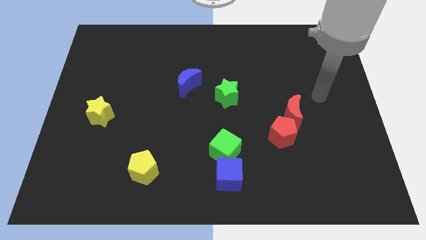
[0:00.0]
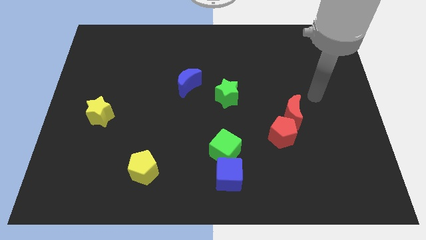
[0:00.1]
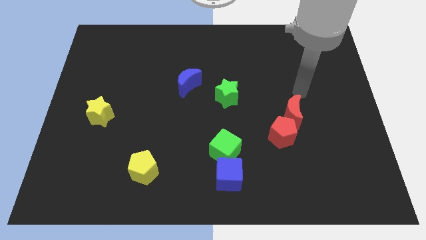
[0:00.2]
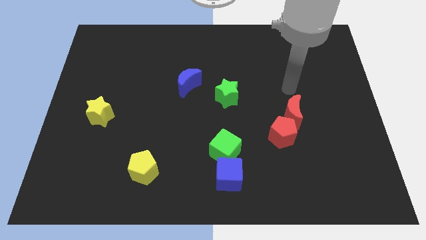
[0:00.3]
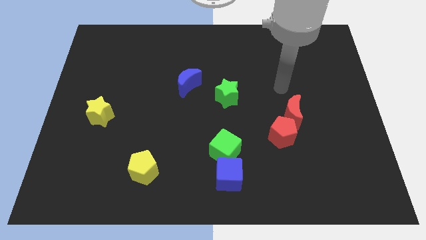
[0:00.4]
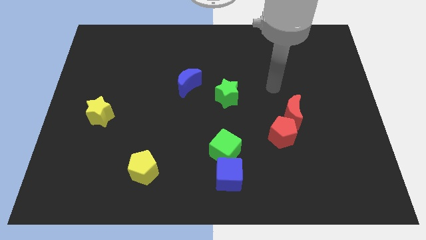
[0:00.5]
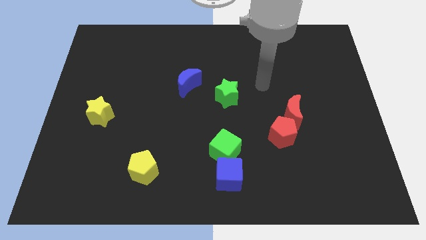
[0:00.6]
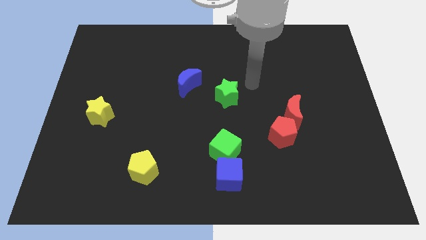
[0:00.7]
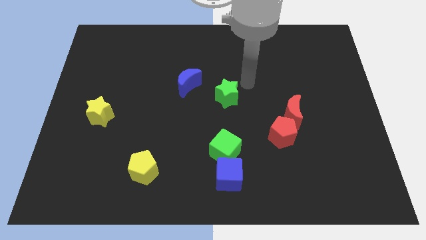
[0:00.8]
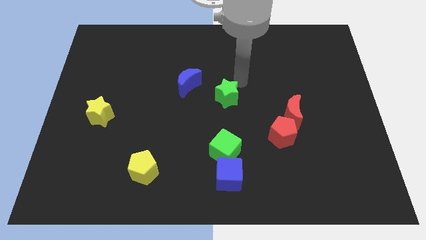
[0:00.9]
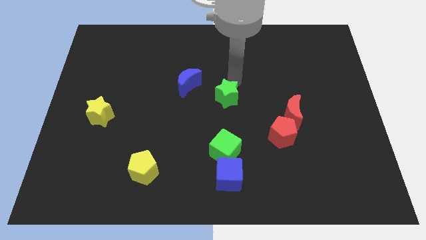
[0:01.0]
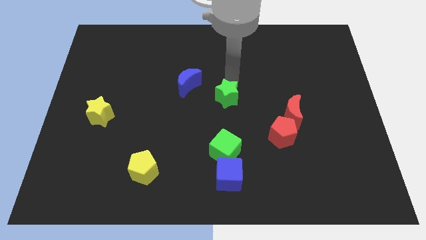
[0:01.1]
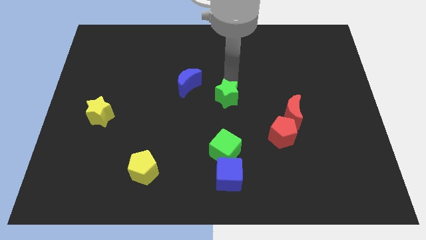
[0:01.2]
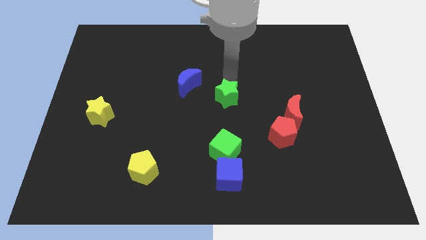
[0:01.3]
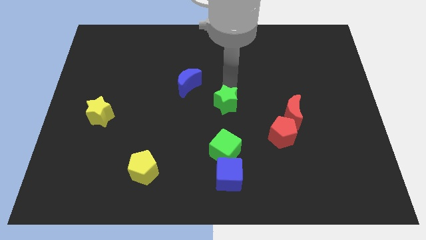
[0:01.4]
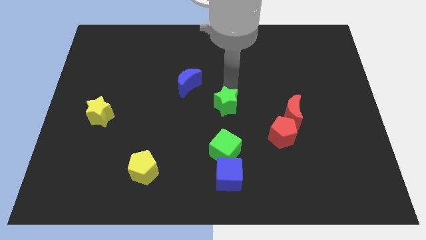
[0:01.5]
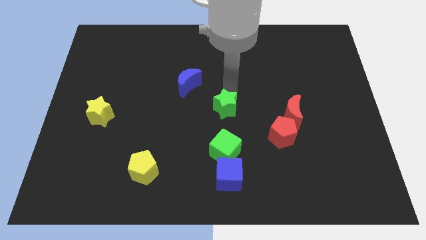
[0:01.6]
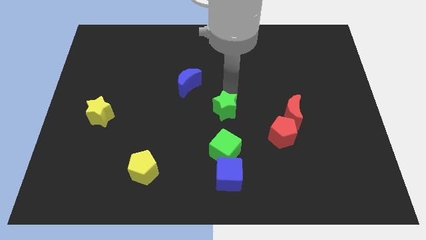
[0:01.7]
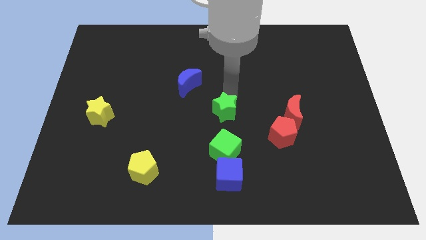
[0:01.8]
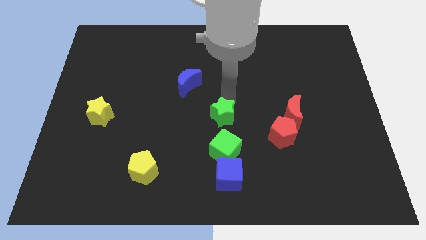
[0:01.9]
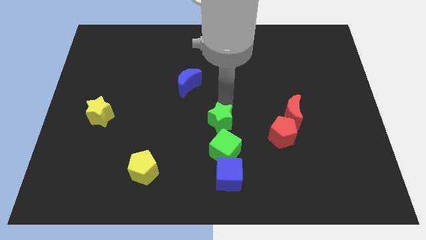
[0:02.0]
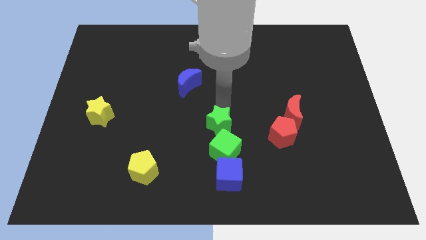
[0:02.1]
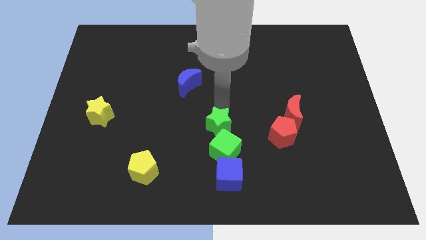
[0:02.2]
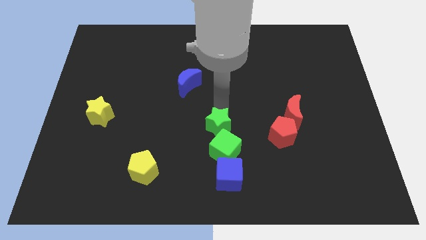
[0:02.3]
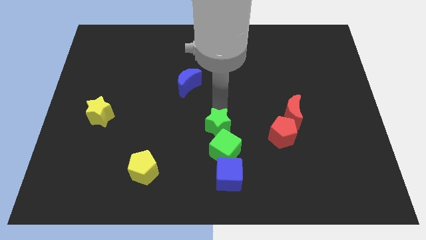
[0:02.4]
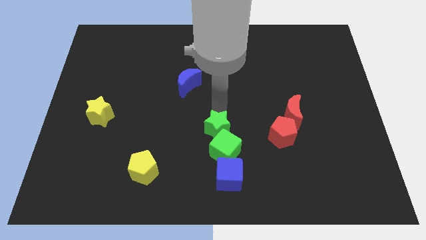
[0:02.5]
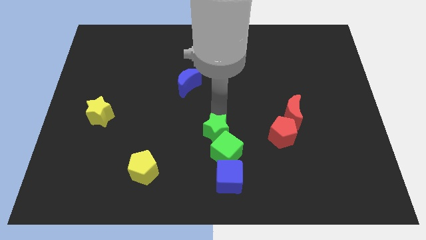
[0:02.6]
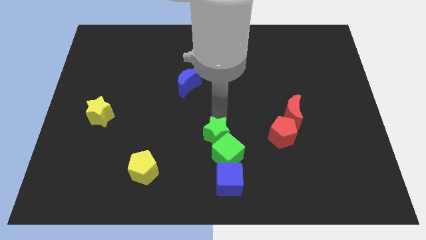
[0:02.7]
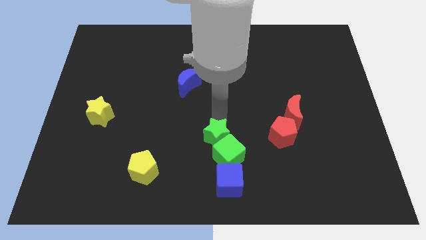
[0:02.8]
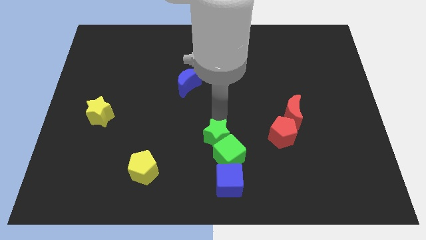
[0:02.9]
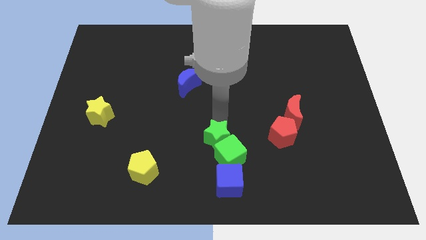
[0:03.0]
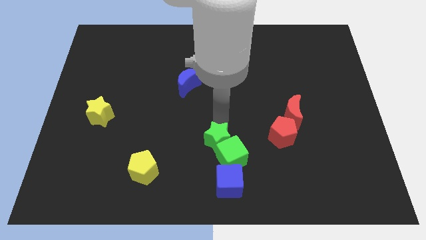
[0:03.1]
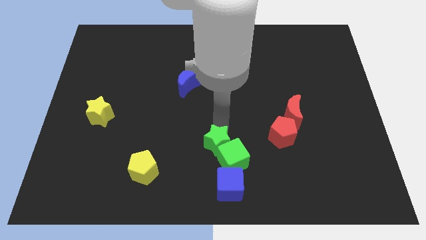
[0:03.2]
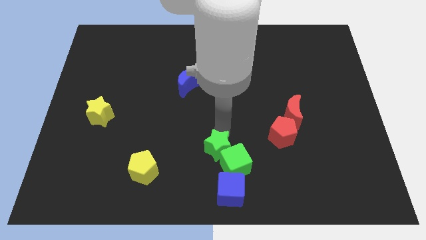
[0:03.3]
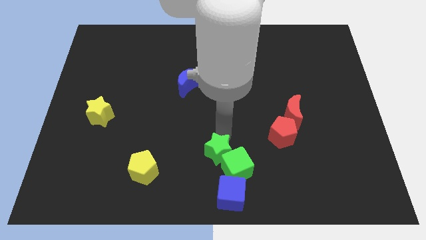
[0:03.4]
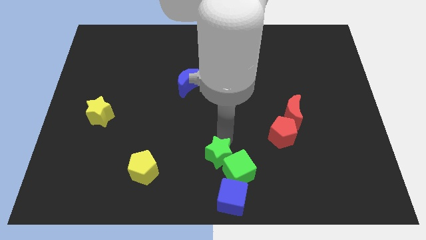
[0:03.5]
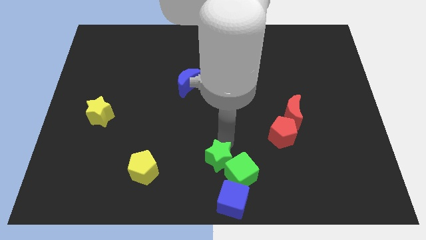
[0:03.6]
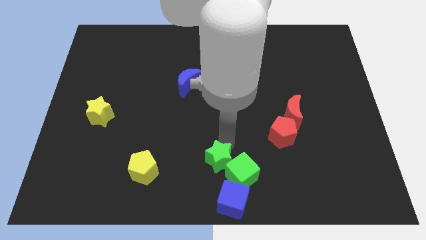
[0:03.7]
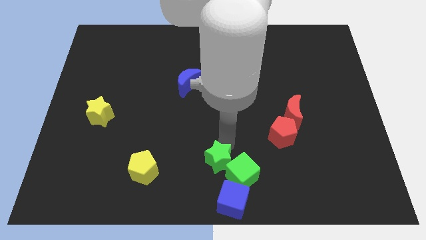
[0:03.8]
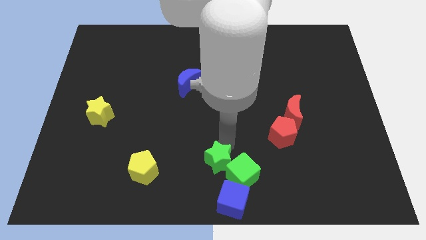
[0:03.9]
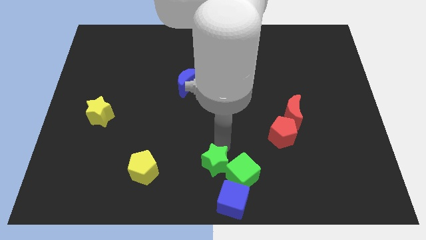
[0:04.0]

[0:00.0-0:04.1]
push the green star into the green cube

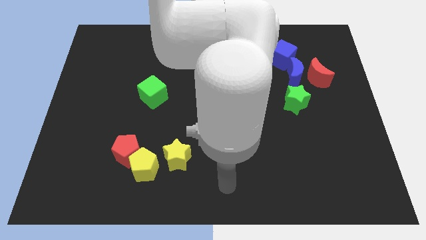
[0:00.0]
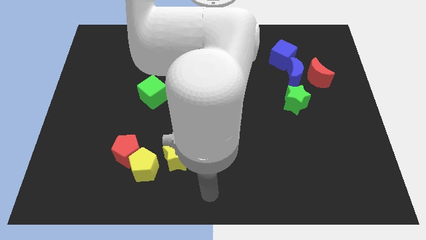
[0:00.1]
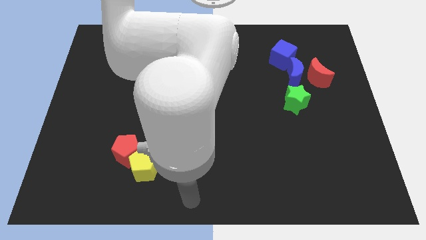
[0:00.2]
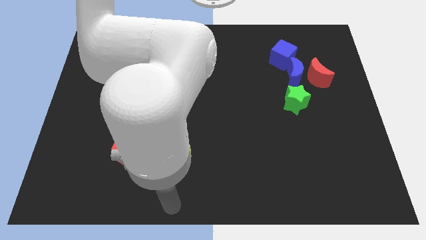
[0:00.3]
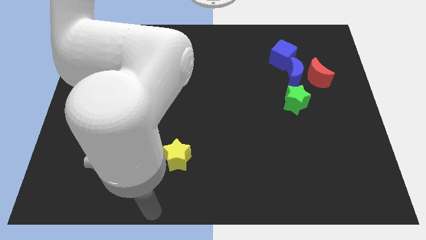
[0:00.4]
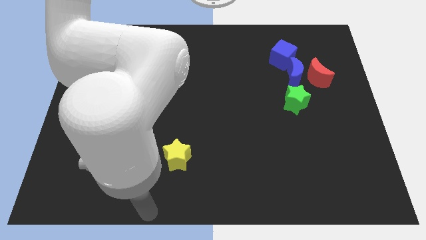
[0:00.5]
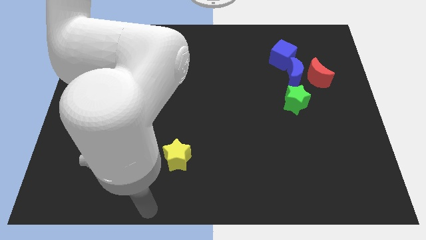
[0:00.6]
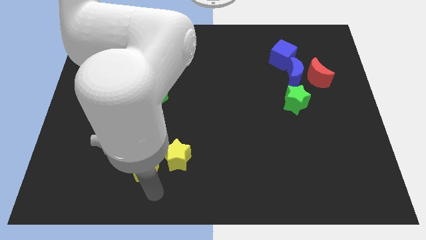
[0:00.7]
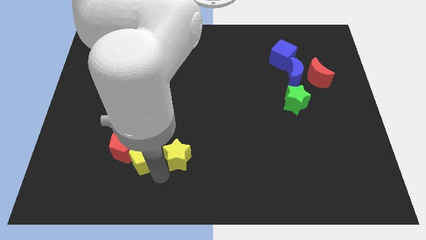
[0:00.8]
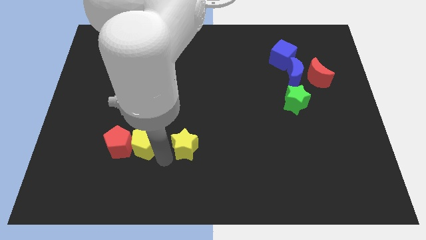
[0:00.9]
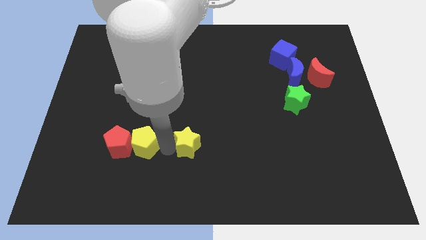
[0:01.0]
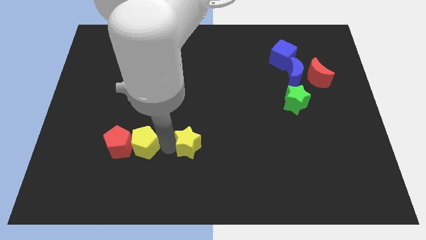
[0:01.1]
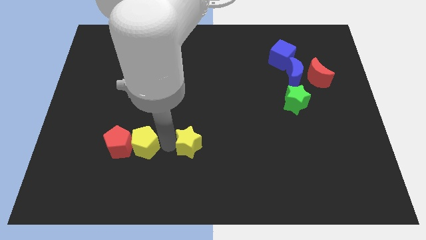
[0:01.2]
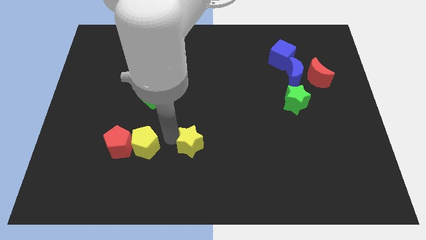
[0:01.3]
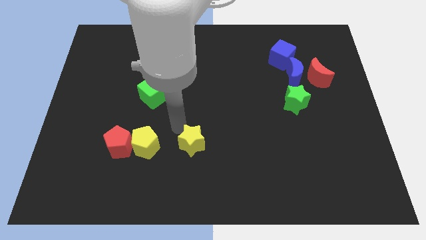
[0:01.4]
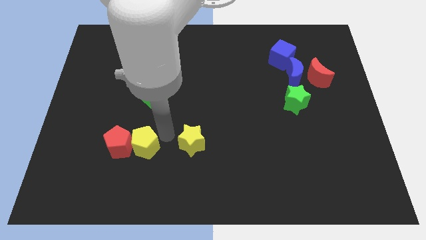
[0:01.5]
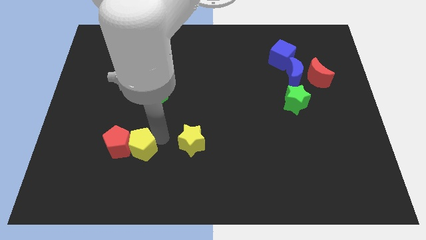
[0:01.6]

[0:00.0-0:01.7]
separate the yellow pentagon and the yellow star

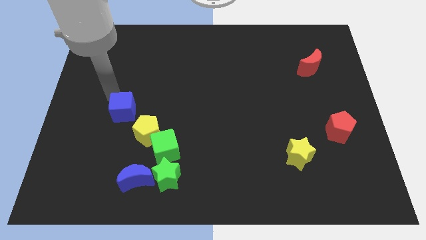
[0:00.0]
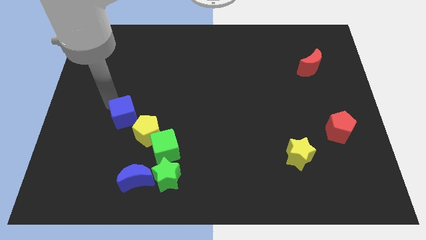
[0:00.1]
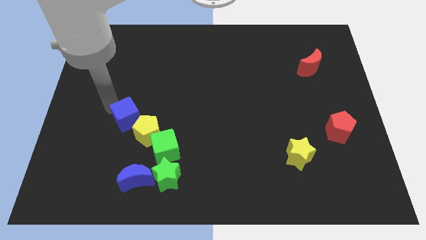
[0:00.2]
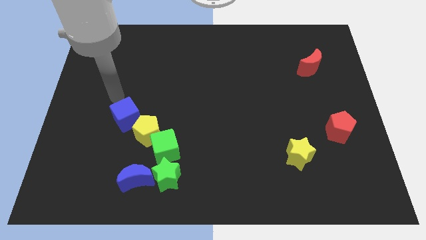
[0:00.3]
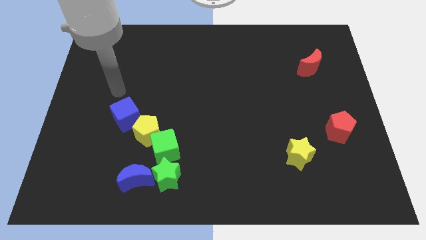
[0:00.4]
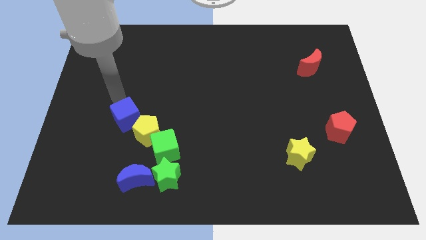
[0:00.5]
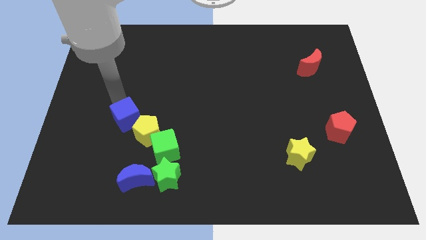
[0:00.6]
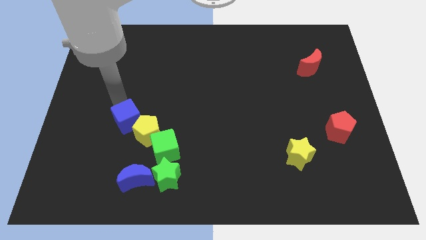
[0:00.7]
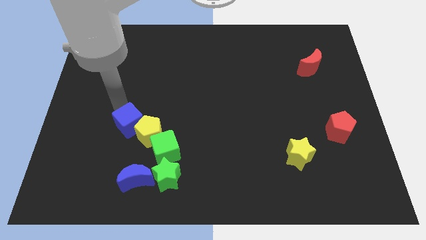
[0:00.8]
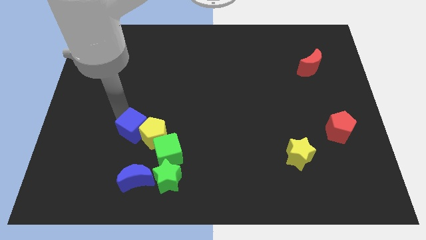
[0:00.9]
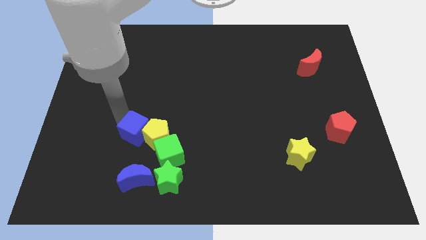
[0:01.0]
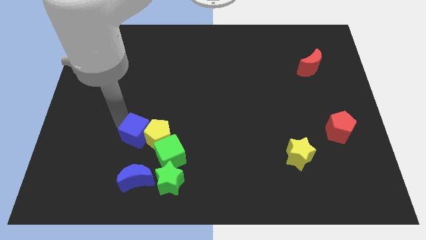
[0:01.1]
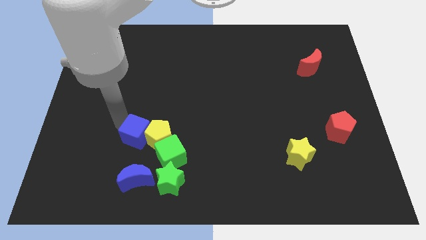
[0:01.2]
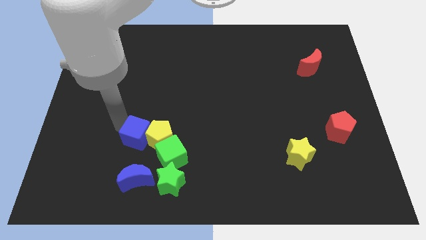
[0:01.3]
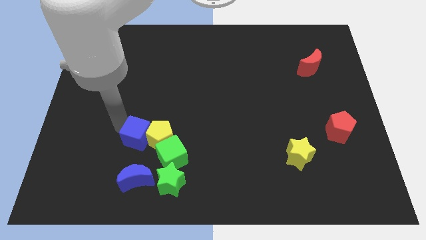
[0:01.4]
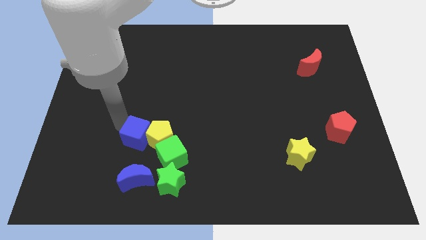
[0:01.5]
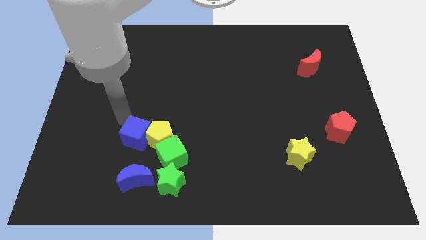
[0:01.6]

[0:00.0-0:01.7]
push the blue cube into the yellow pentagon

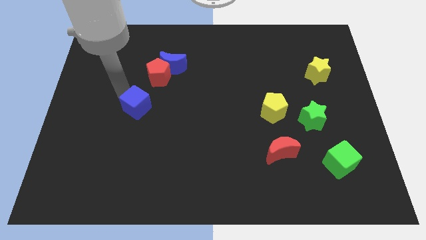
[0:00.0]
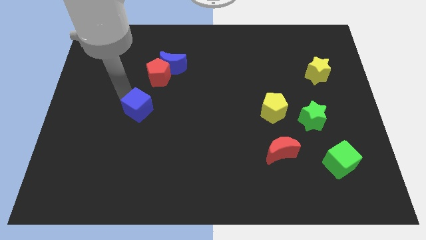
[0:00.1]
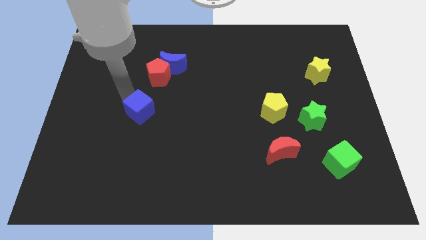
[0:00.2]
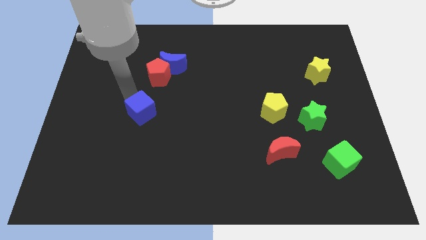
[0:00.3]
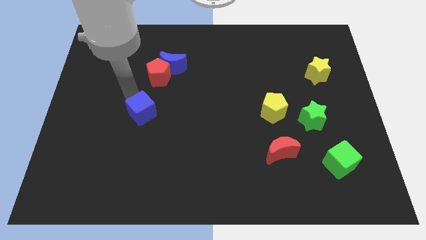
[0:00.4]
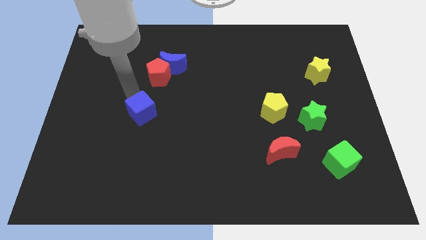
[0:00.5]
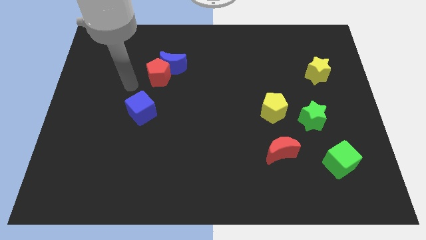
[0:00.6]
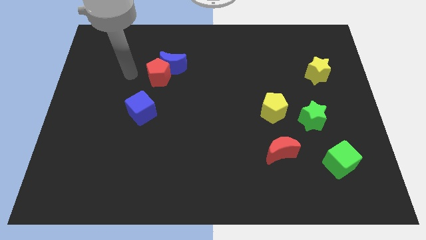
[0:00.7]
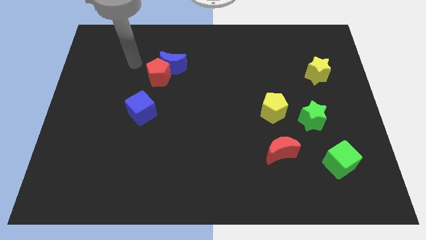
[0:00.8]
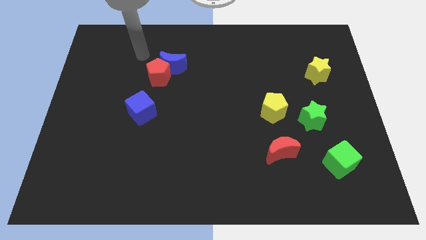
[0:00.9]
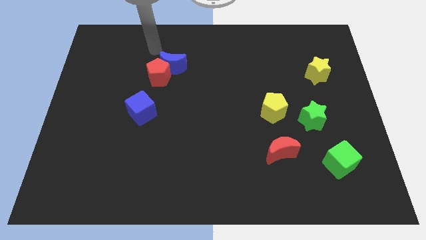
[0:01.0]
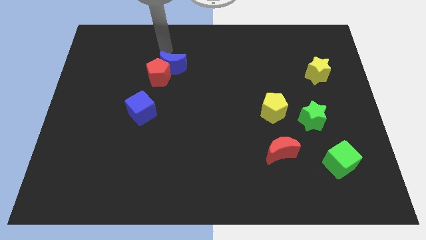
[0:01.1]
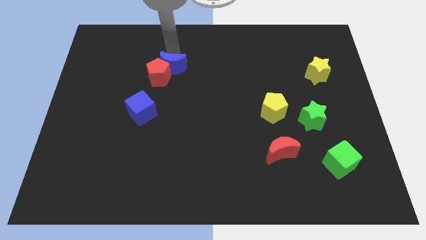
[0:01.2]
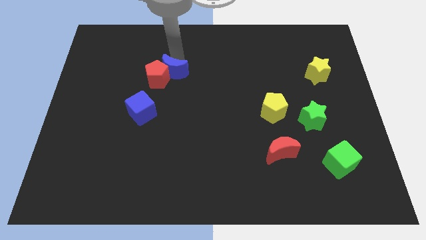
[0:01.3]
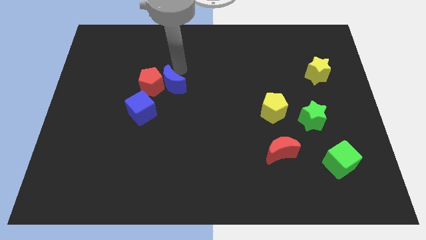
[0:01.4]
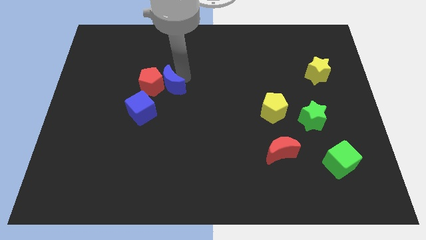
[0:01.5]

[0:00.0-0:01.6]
point your arm above blue moon
